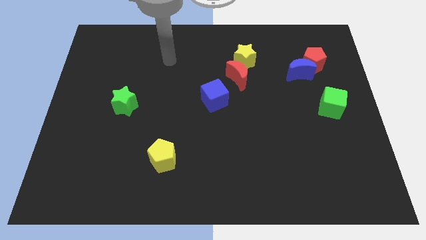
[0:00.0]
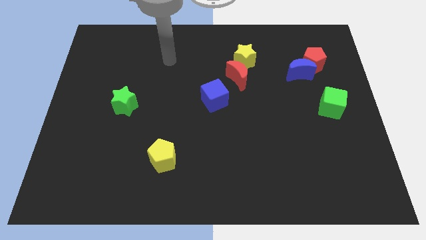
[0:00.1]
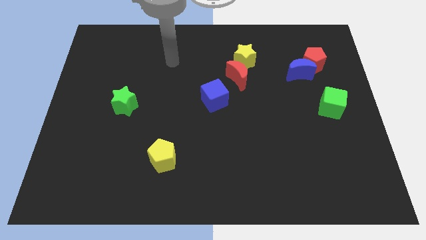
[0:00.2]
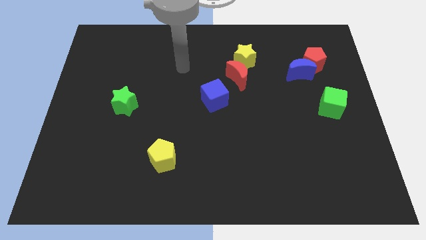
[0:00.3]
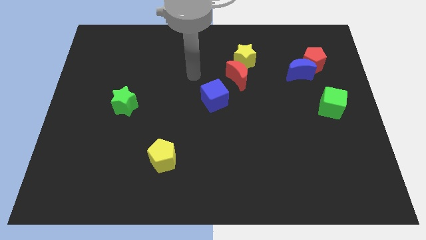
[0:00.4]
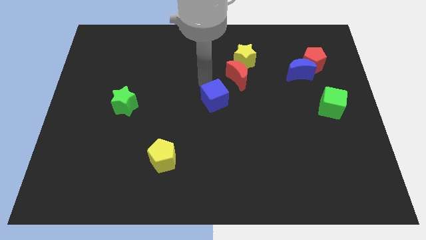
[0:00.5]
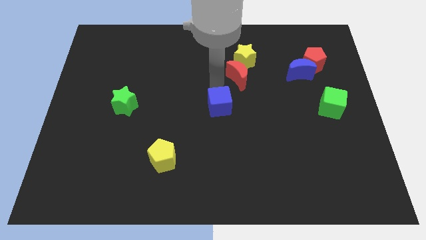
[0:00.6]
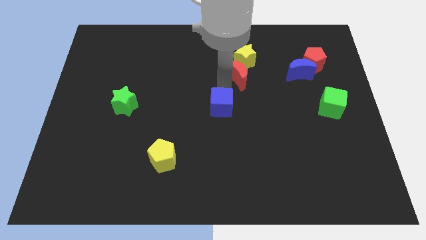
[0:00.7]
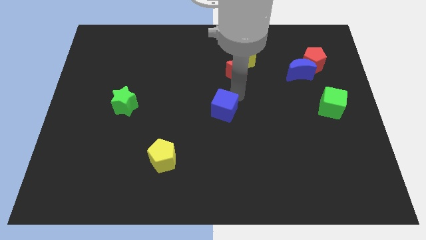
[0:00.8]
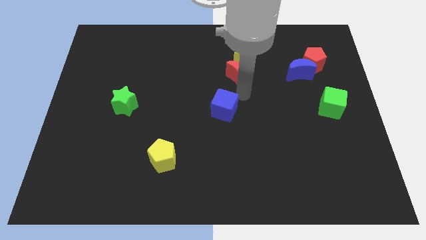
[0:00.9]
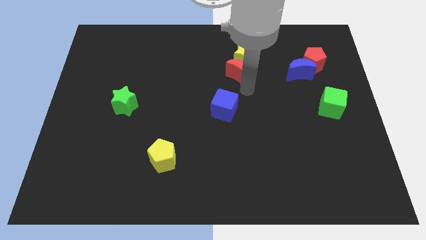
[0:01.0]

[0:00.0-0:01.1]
move the blue cube slightly downwards

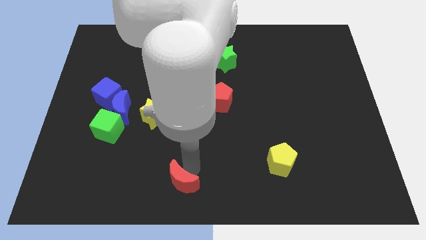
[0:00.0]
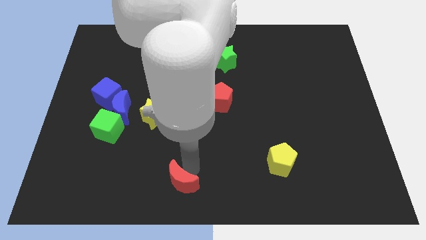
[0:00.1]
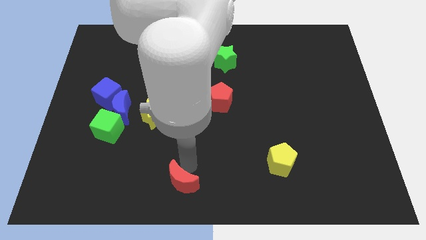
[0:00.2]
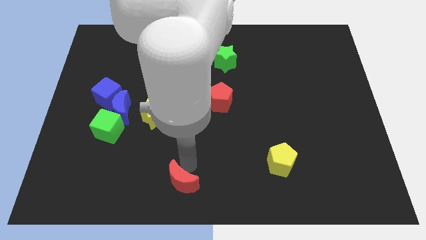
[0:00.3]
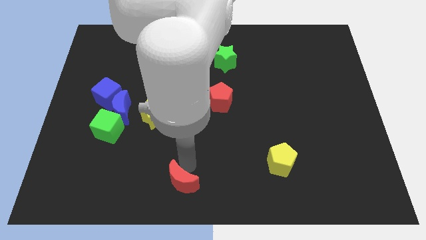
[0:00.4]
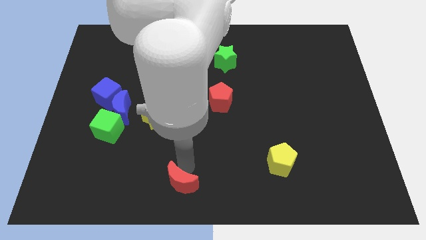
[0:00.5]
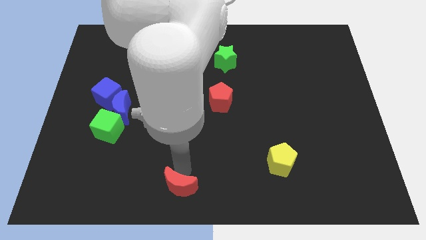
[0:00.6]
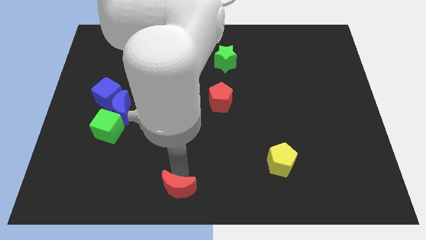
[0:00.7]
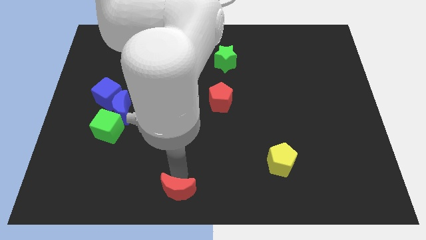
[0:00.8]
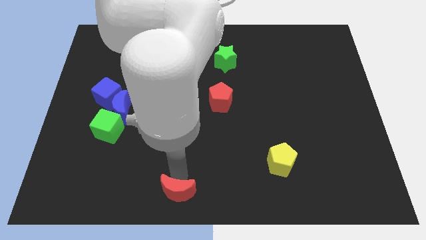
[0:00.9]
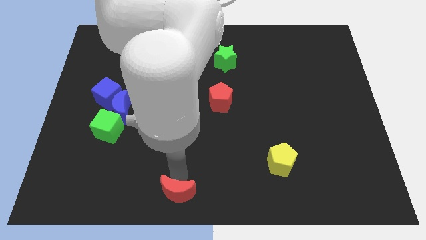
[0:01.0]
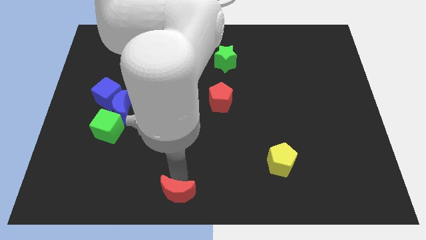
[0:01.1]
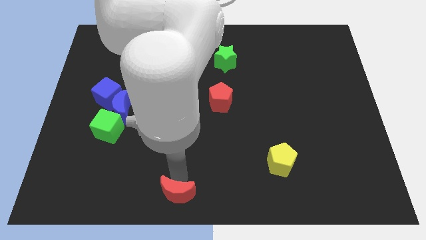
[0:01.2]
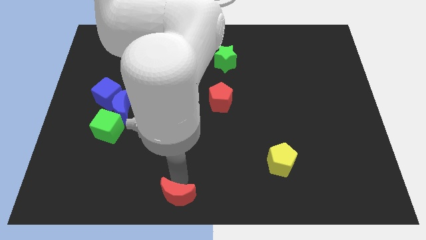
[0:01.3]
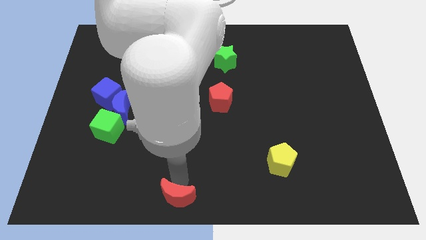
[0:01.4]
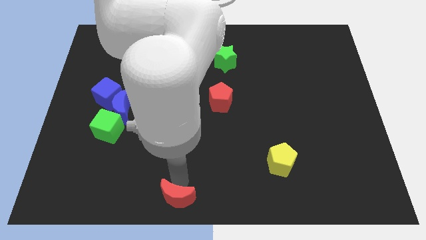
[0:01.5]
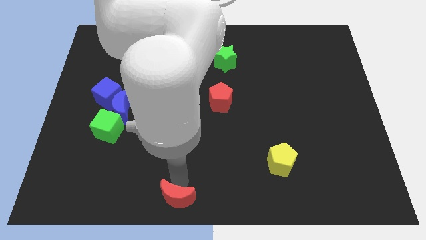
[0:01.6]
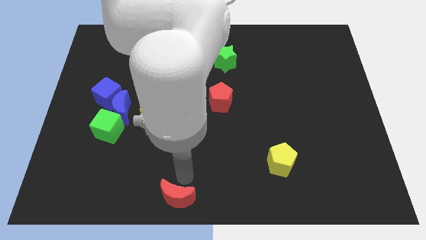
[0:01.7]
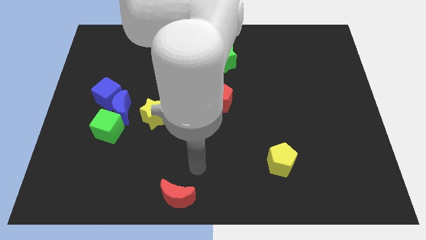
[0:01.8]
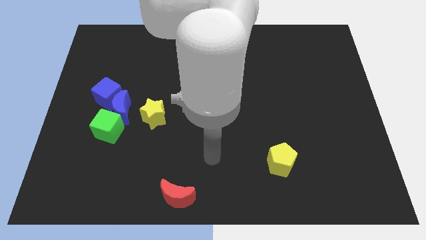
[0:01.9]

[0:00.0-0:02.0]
place the red crescent at the bottom center of the board

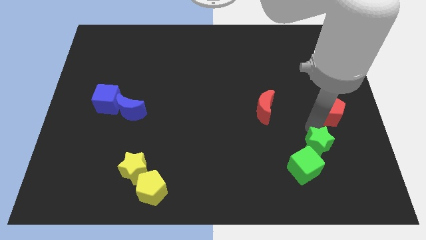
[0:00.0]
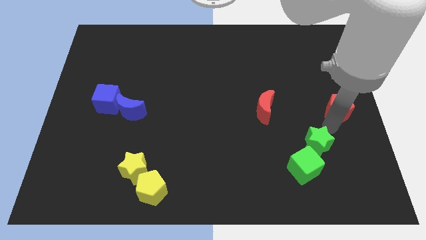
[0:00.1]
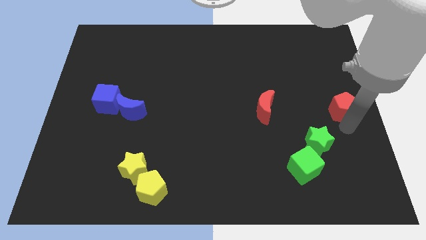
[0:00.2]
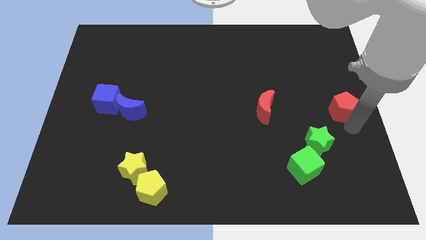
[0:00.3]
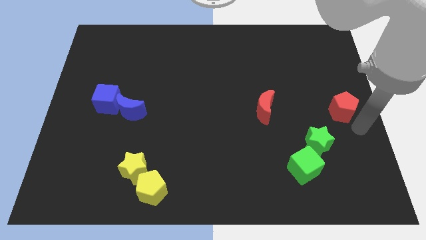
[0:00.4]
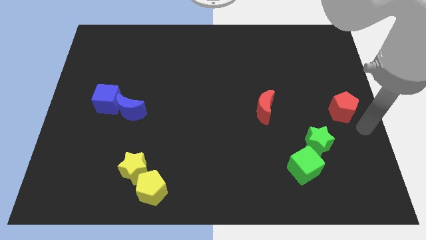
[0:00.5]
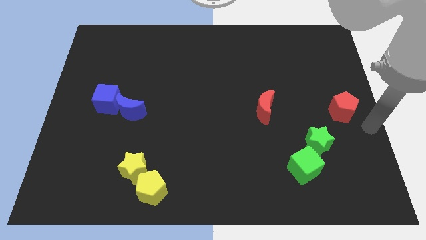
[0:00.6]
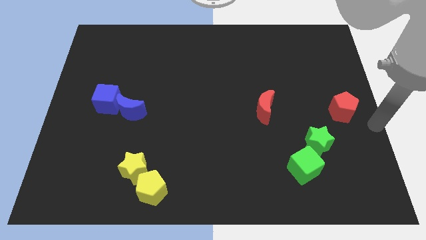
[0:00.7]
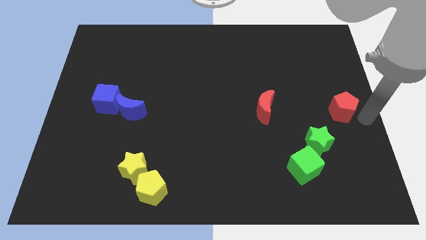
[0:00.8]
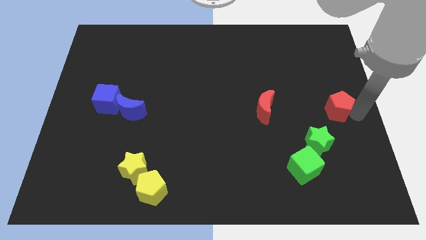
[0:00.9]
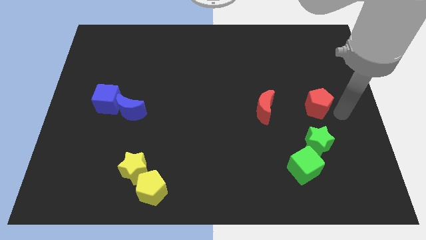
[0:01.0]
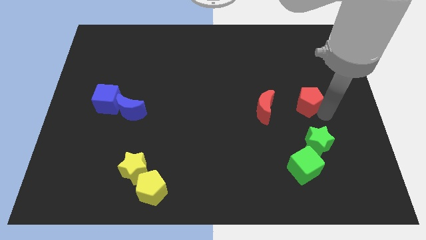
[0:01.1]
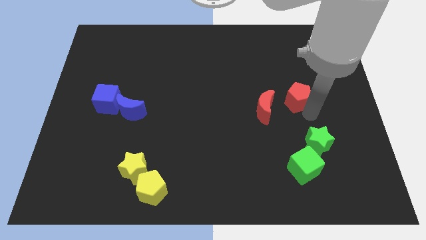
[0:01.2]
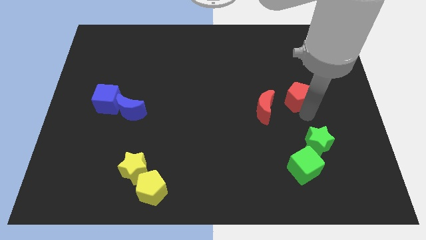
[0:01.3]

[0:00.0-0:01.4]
push the red pentagon close to the red moon

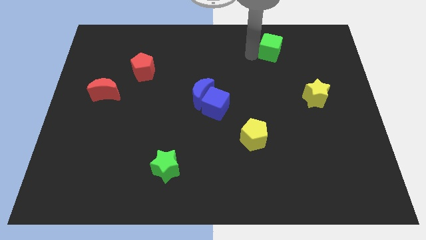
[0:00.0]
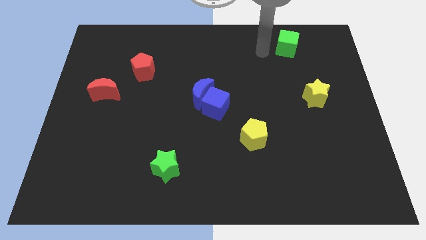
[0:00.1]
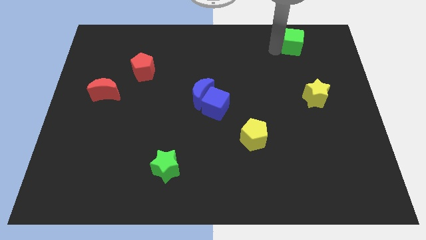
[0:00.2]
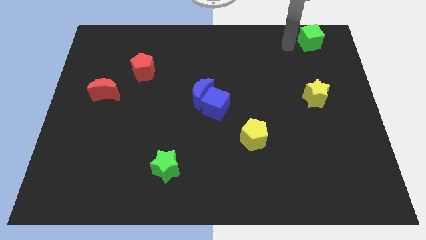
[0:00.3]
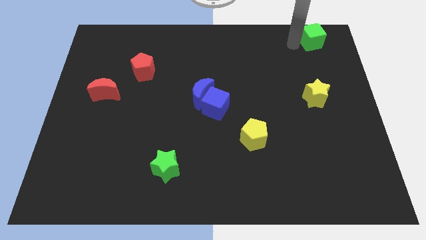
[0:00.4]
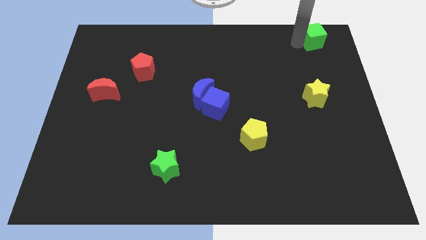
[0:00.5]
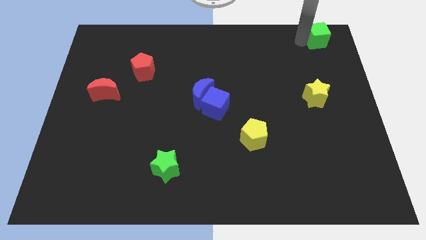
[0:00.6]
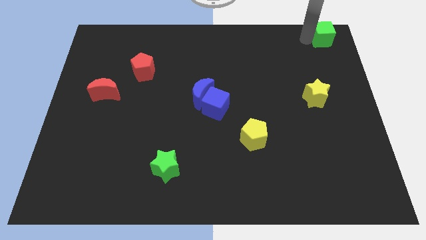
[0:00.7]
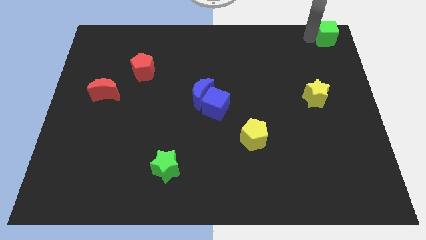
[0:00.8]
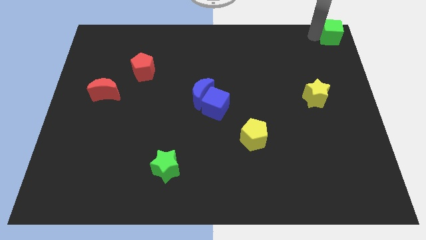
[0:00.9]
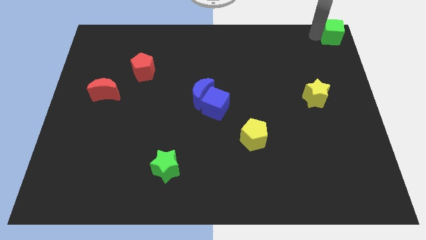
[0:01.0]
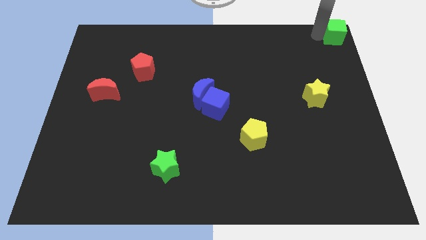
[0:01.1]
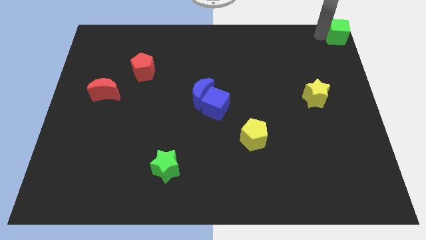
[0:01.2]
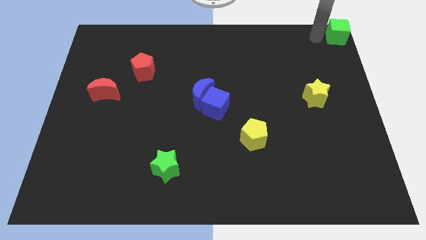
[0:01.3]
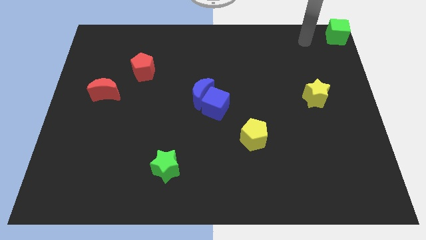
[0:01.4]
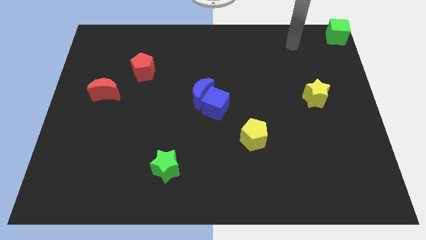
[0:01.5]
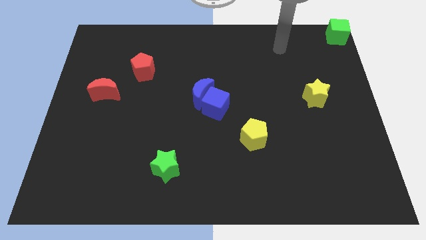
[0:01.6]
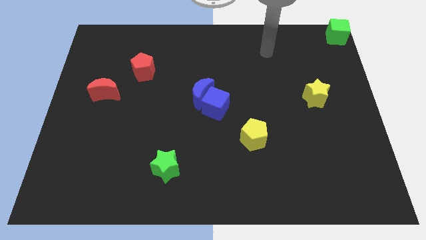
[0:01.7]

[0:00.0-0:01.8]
push the green cube to the top right corner

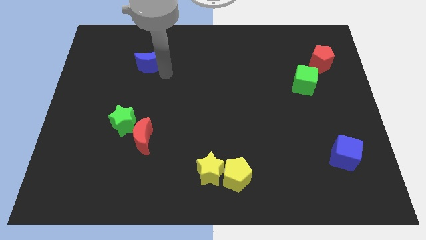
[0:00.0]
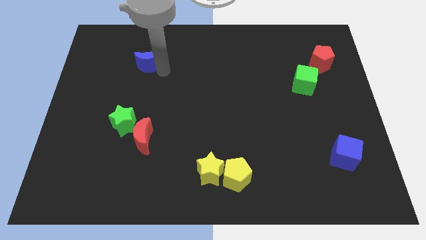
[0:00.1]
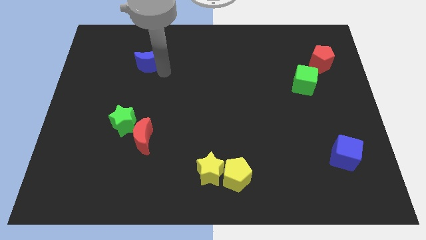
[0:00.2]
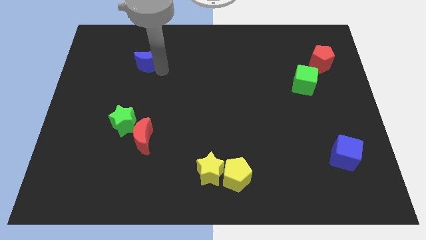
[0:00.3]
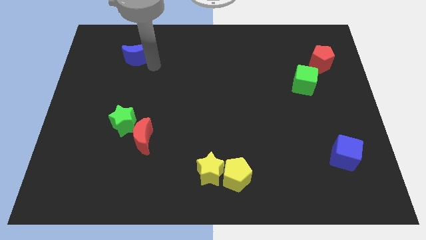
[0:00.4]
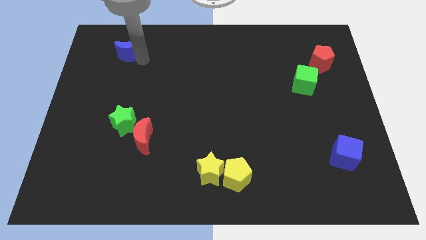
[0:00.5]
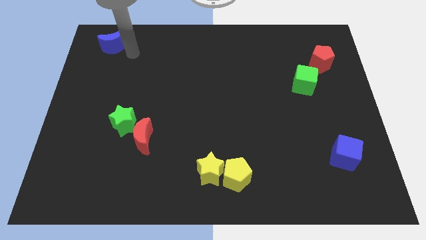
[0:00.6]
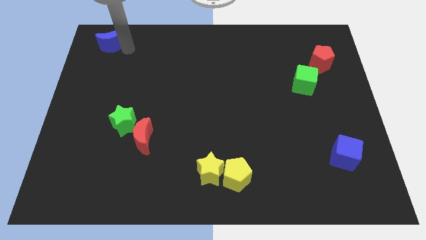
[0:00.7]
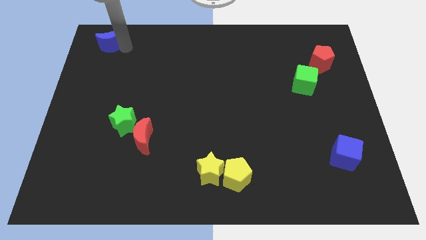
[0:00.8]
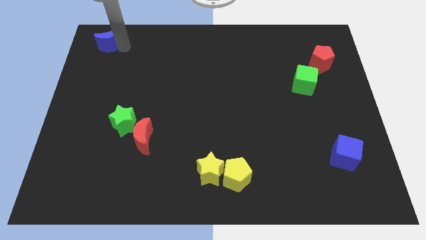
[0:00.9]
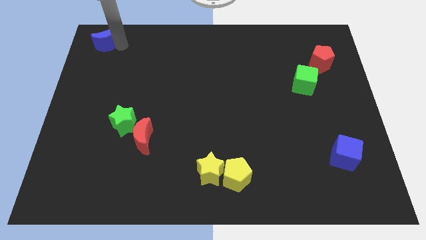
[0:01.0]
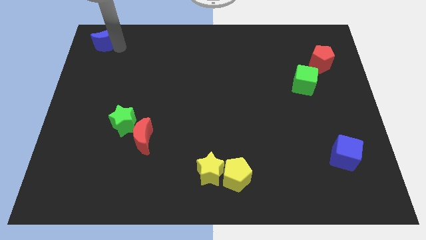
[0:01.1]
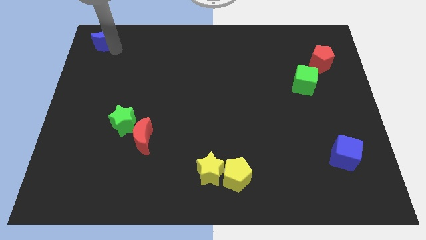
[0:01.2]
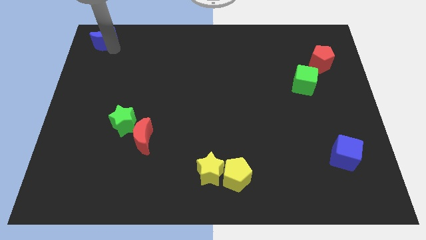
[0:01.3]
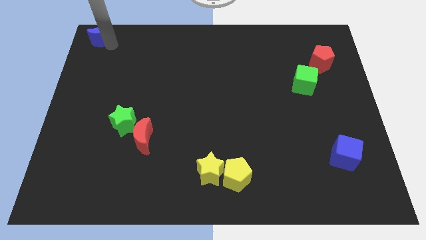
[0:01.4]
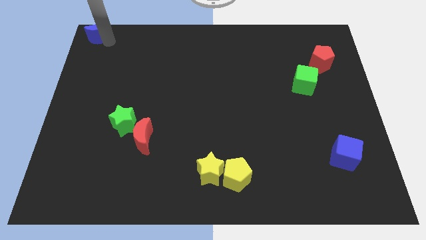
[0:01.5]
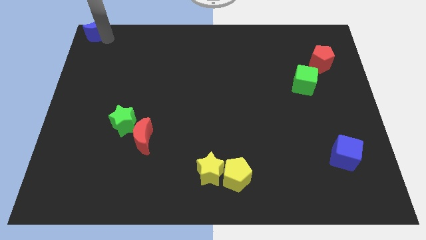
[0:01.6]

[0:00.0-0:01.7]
move the blue moon to the top left corner

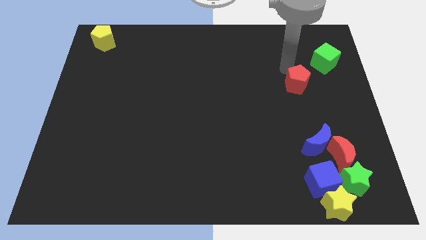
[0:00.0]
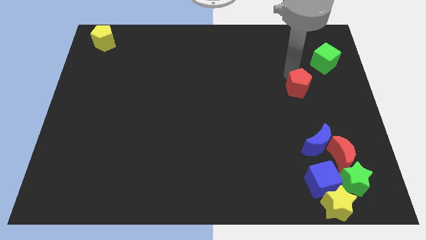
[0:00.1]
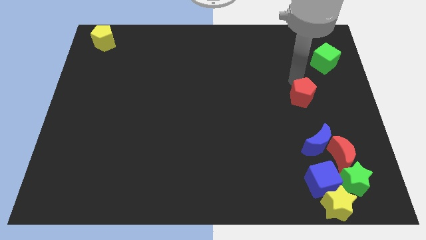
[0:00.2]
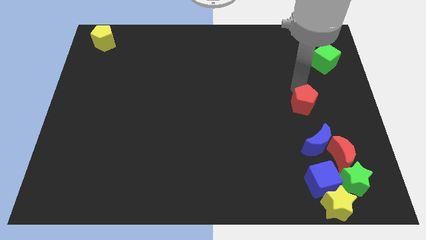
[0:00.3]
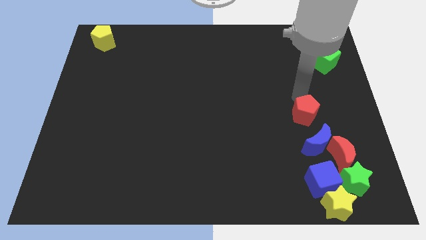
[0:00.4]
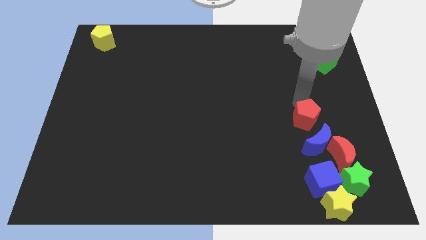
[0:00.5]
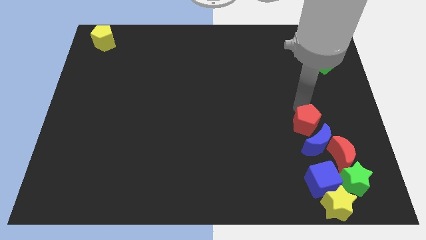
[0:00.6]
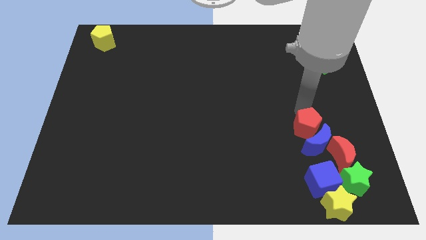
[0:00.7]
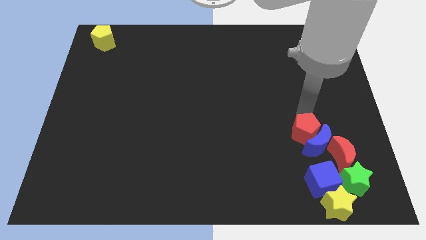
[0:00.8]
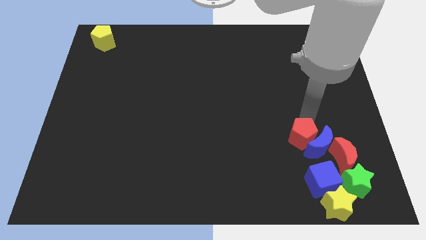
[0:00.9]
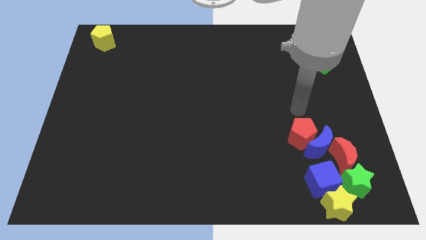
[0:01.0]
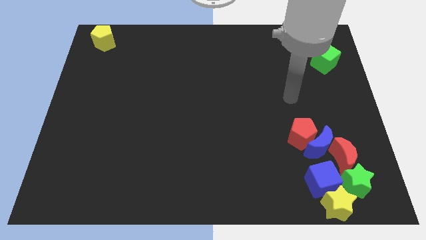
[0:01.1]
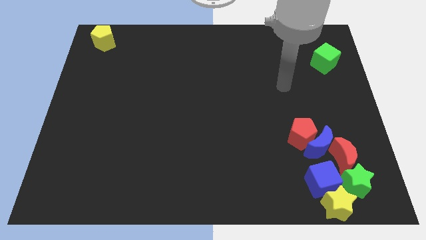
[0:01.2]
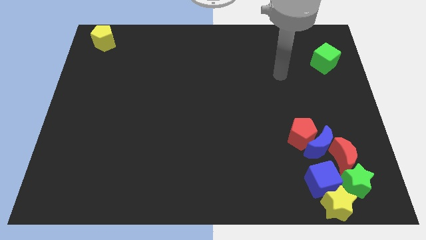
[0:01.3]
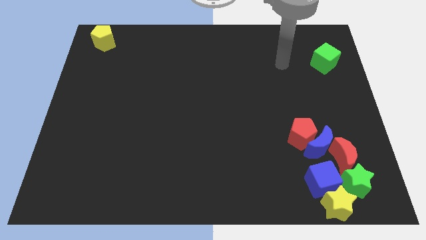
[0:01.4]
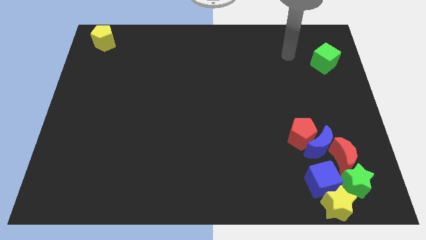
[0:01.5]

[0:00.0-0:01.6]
push the red pentagon into the blue moon
